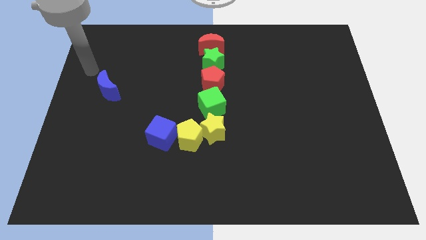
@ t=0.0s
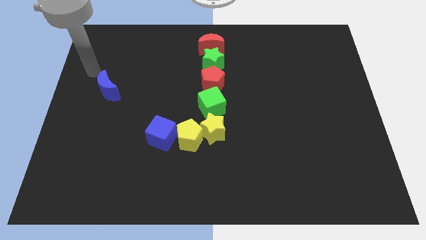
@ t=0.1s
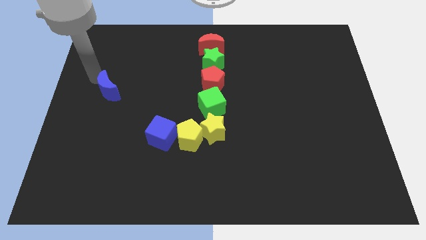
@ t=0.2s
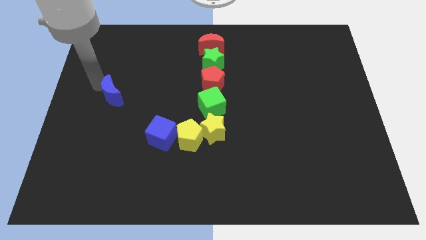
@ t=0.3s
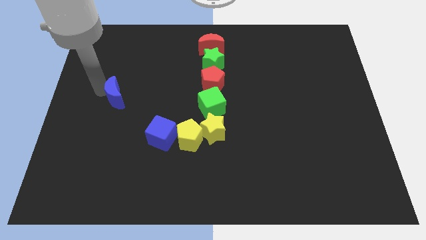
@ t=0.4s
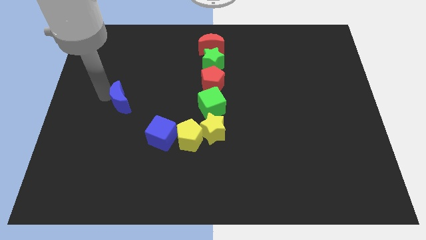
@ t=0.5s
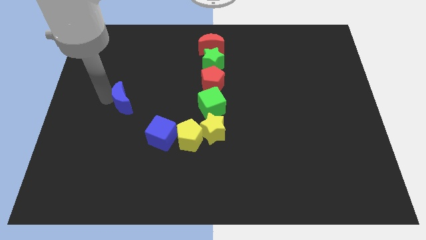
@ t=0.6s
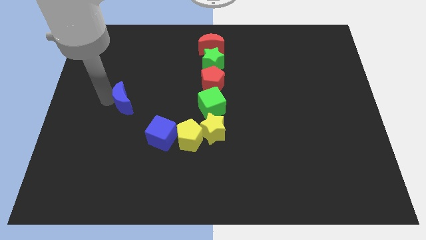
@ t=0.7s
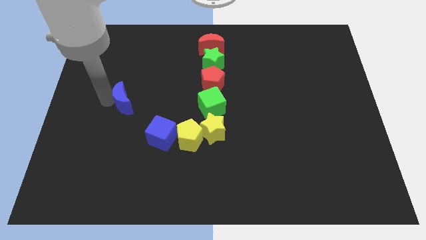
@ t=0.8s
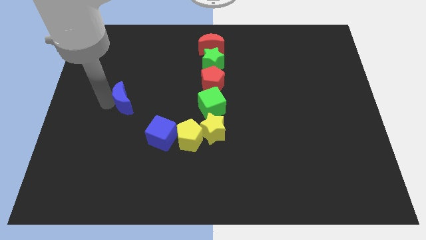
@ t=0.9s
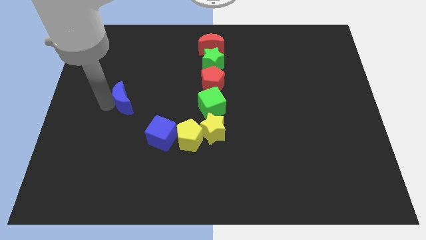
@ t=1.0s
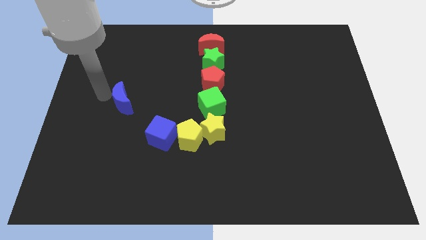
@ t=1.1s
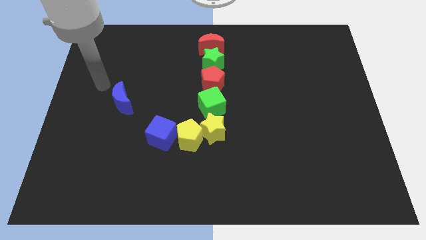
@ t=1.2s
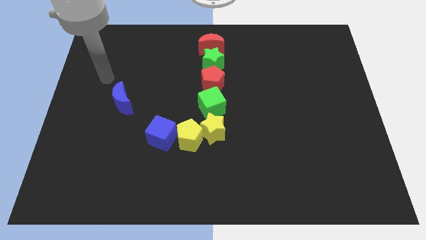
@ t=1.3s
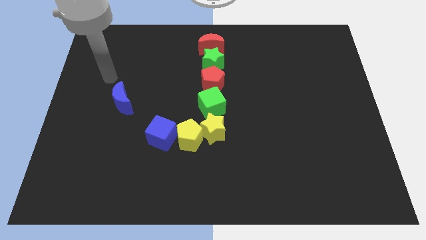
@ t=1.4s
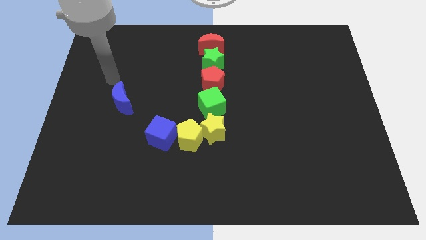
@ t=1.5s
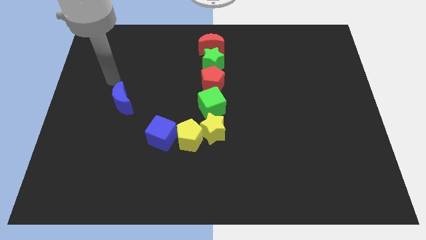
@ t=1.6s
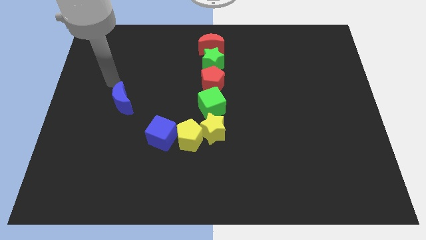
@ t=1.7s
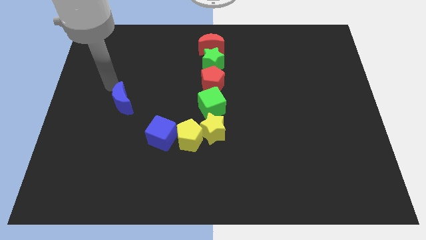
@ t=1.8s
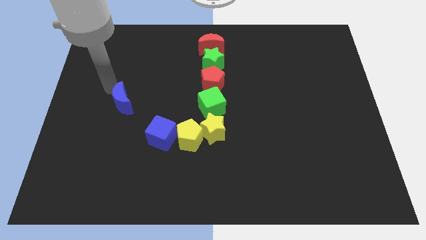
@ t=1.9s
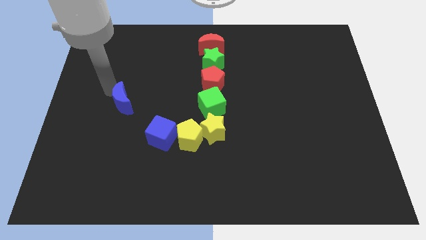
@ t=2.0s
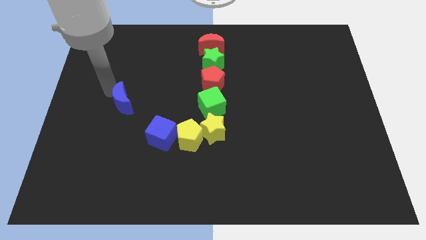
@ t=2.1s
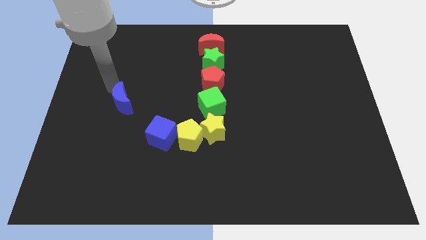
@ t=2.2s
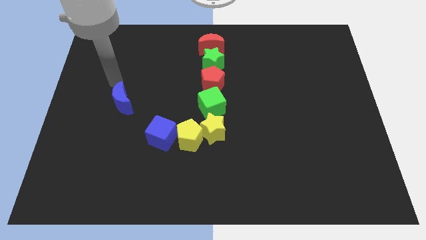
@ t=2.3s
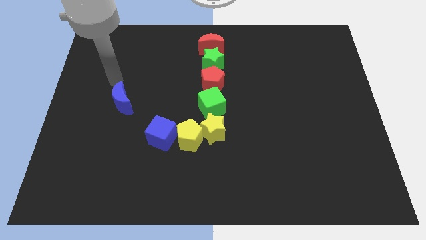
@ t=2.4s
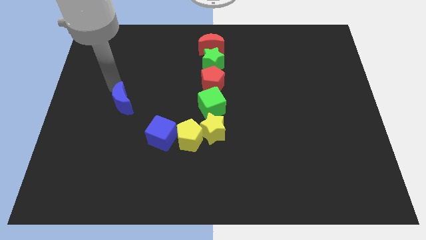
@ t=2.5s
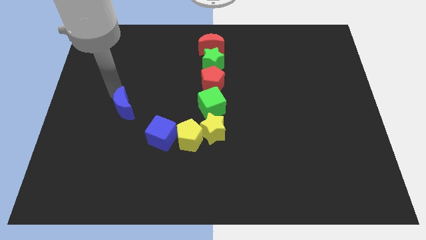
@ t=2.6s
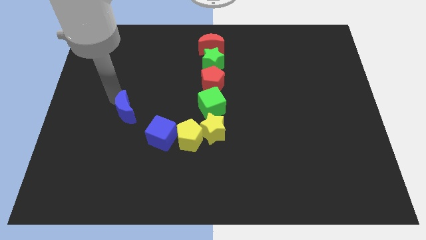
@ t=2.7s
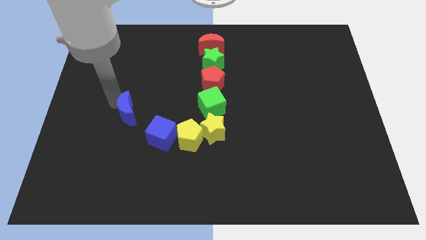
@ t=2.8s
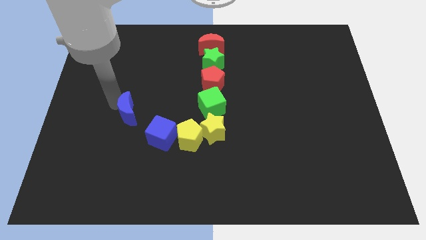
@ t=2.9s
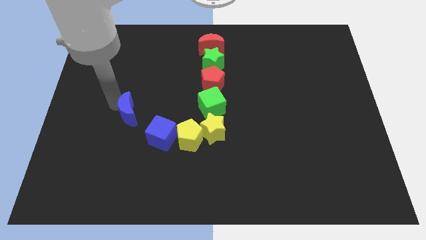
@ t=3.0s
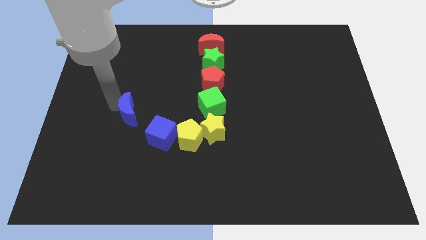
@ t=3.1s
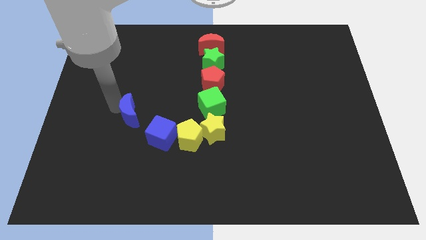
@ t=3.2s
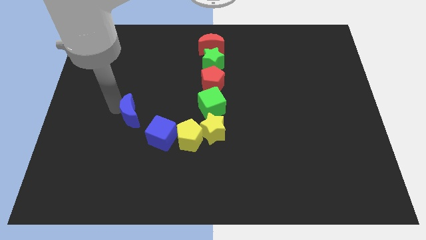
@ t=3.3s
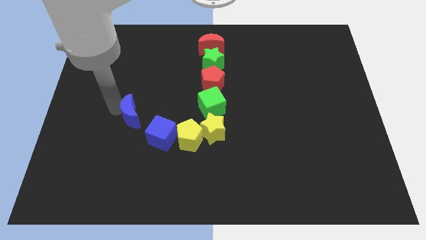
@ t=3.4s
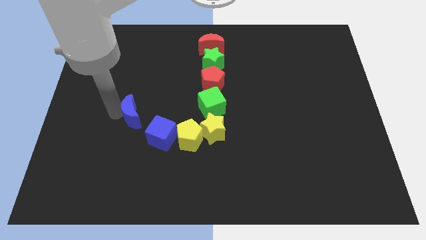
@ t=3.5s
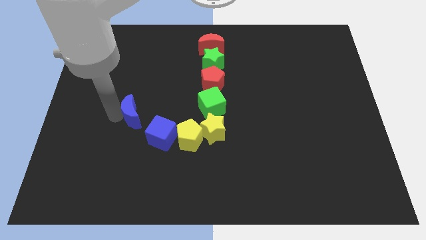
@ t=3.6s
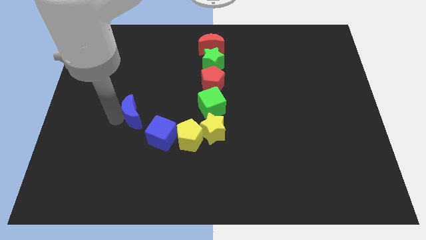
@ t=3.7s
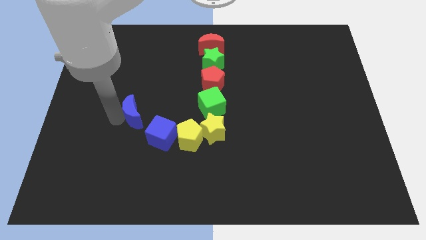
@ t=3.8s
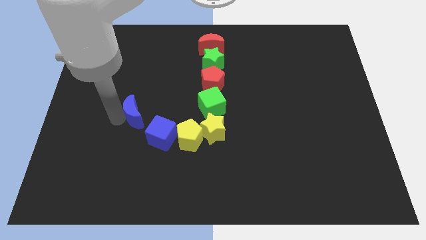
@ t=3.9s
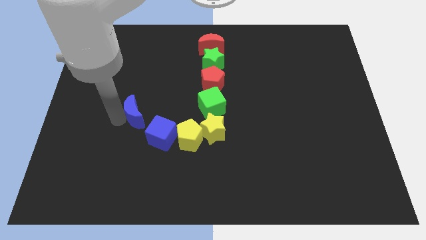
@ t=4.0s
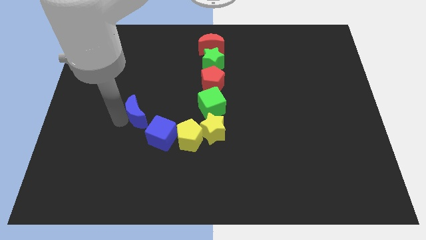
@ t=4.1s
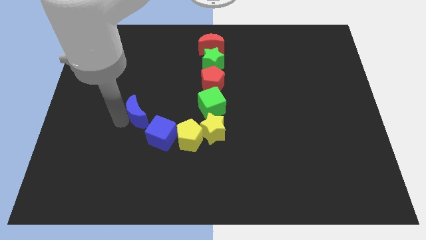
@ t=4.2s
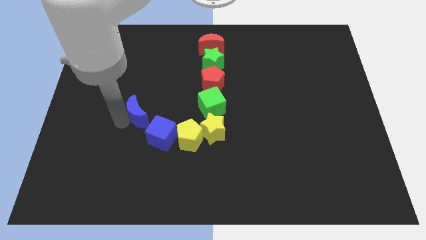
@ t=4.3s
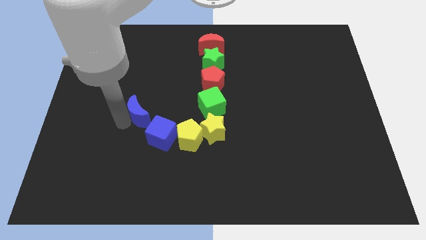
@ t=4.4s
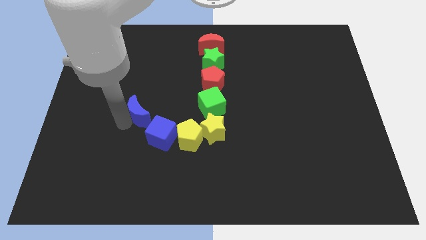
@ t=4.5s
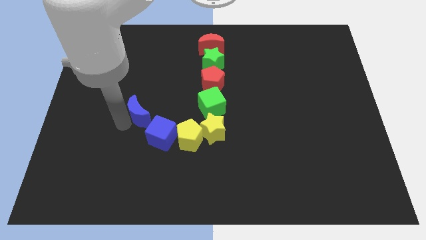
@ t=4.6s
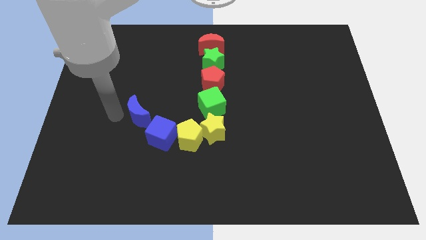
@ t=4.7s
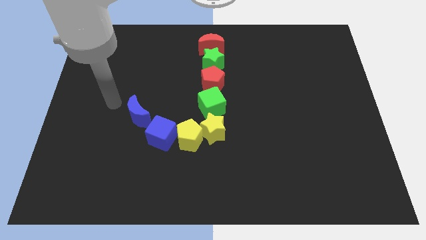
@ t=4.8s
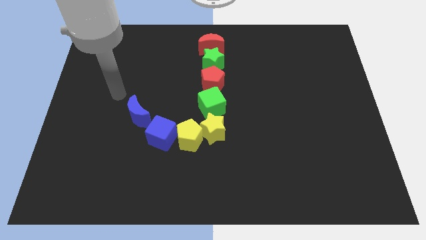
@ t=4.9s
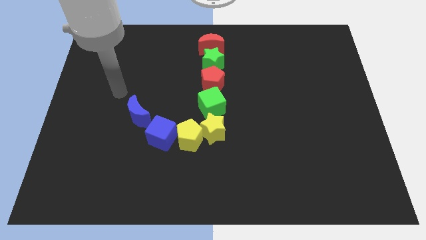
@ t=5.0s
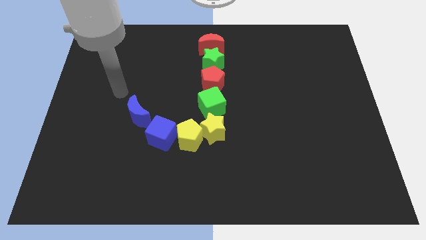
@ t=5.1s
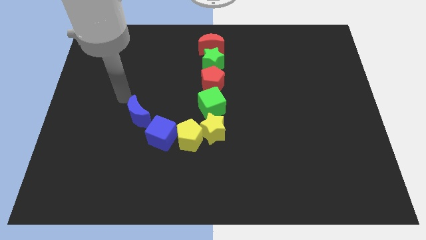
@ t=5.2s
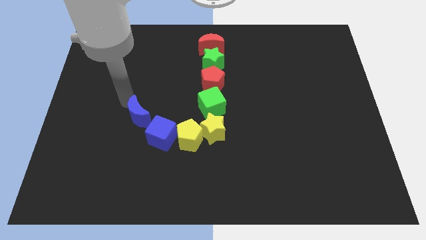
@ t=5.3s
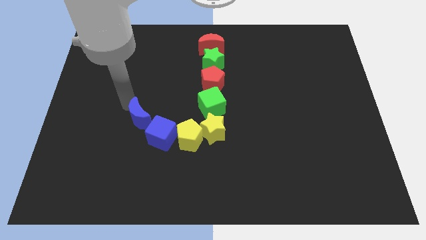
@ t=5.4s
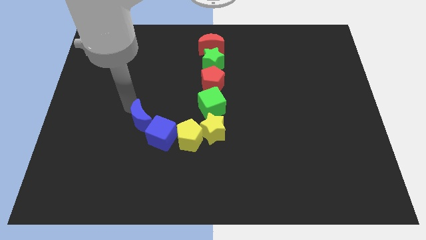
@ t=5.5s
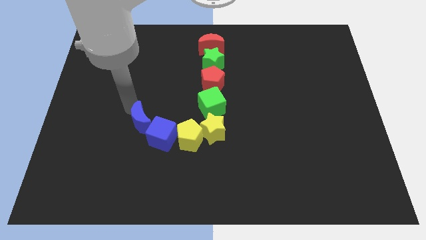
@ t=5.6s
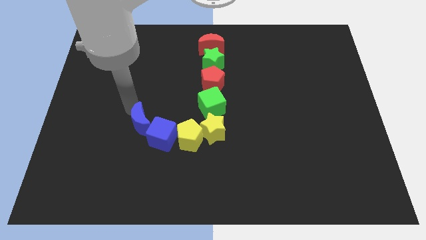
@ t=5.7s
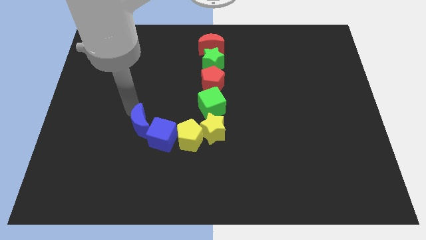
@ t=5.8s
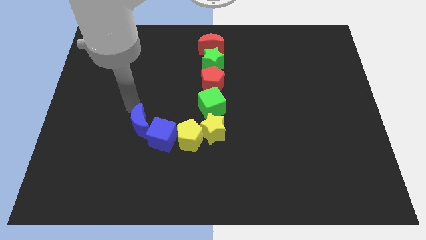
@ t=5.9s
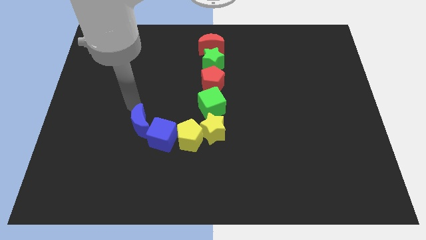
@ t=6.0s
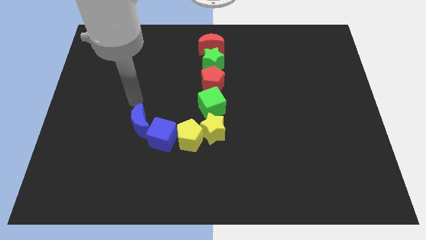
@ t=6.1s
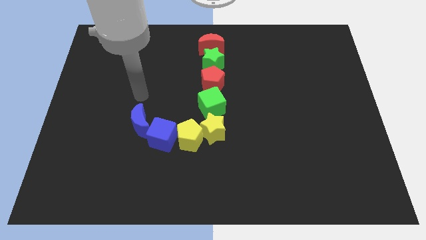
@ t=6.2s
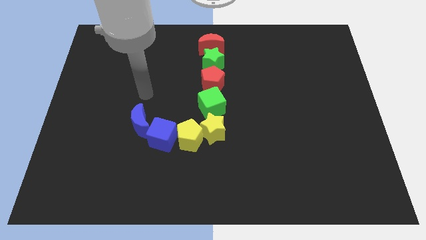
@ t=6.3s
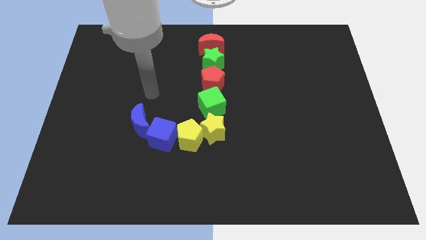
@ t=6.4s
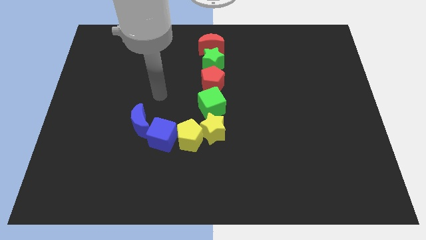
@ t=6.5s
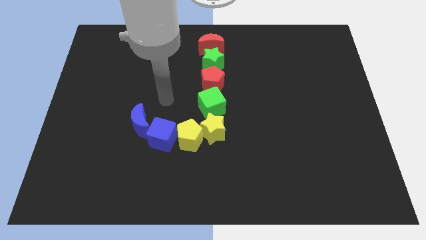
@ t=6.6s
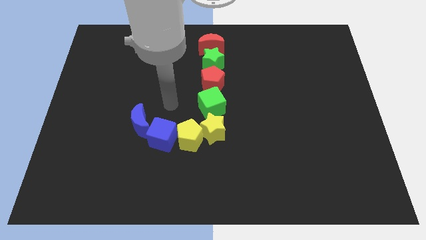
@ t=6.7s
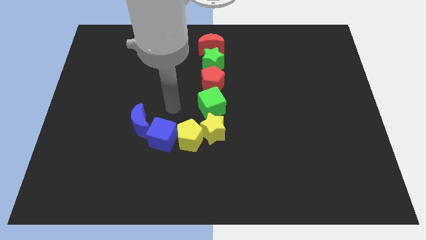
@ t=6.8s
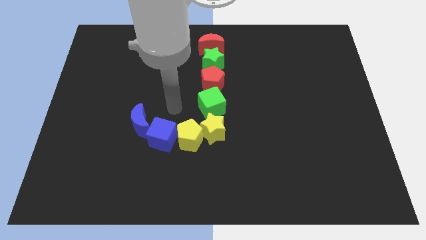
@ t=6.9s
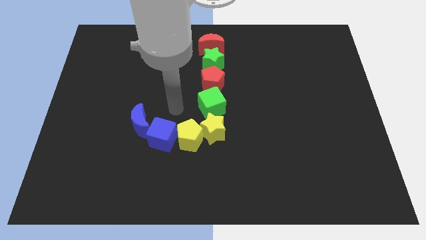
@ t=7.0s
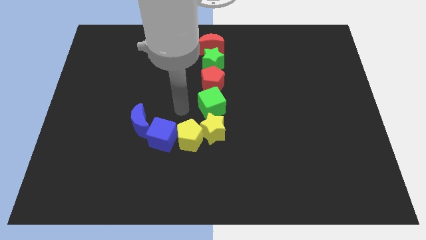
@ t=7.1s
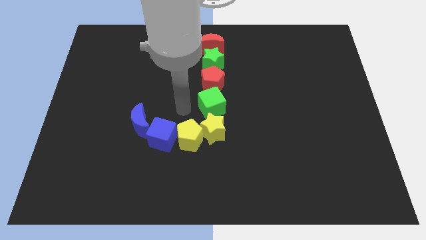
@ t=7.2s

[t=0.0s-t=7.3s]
push the blue moon into blue cube

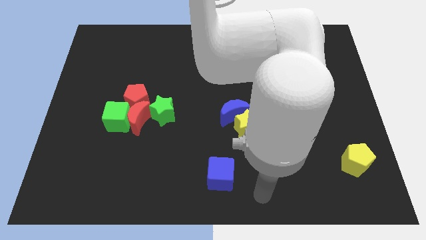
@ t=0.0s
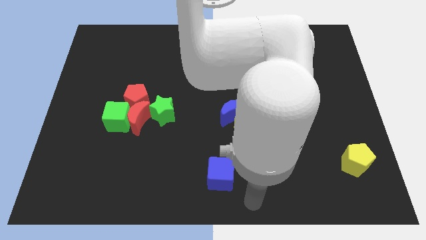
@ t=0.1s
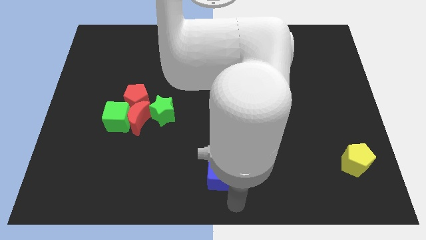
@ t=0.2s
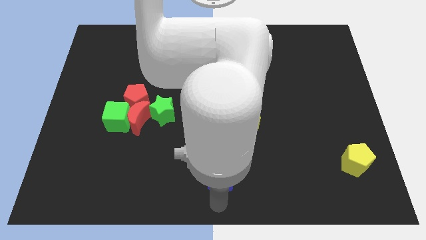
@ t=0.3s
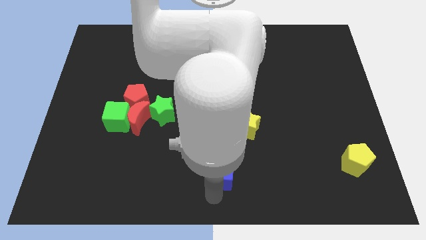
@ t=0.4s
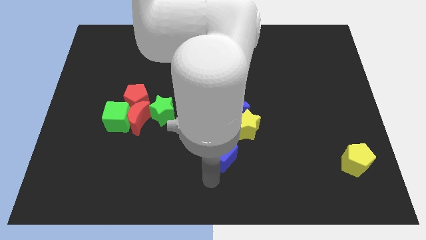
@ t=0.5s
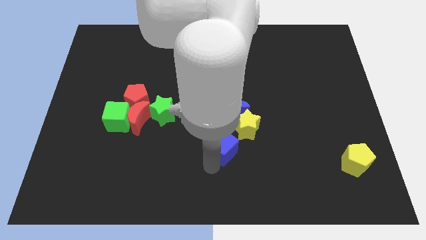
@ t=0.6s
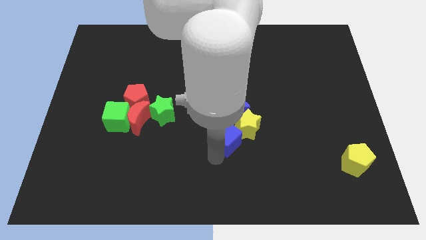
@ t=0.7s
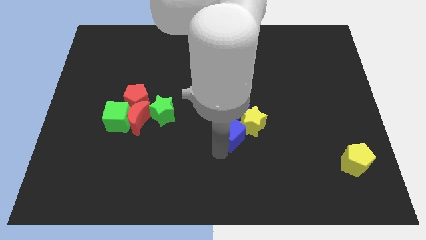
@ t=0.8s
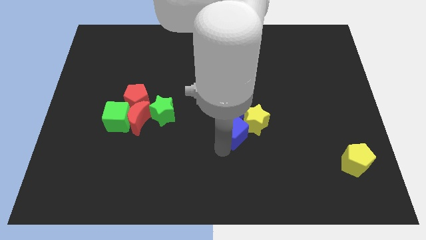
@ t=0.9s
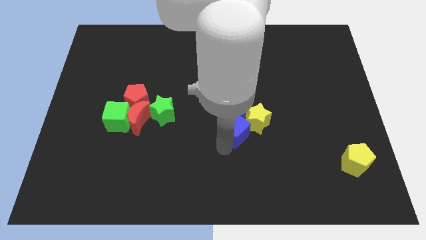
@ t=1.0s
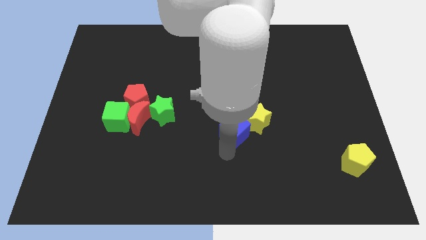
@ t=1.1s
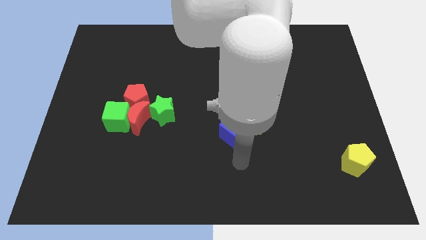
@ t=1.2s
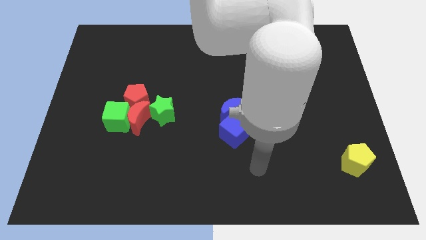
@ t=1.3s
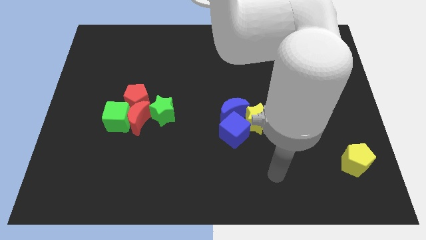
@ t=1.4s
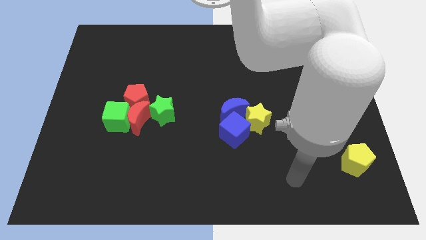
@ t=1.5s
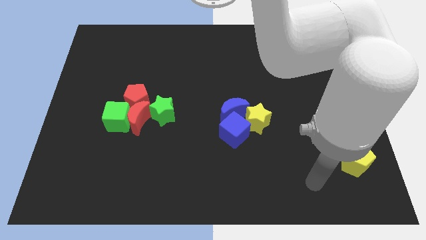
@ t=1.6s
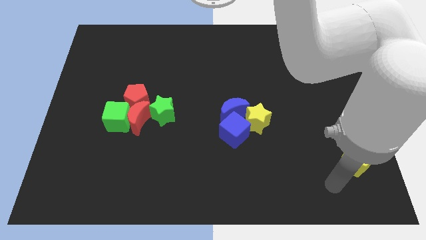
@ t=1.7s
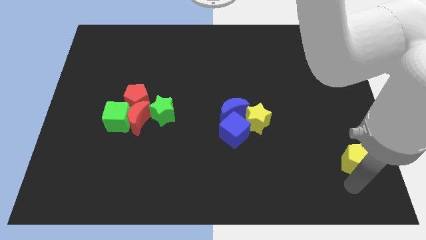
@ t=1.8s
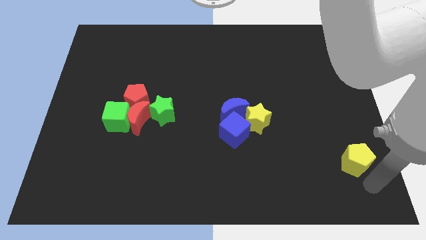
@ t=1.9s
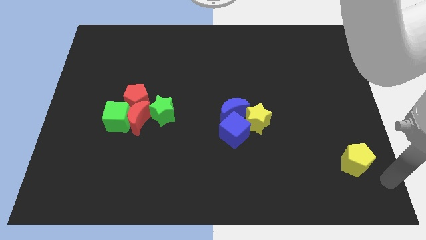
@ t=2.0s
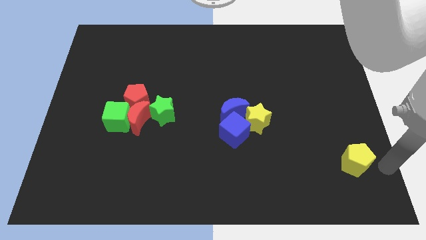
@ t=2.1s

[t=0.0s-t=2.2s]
move blue cube to the bottom left of blue moon
